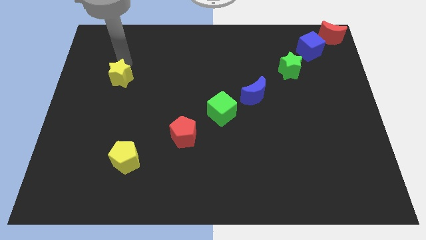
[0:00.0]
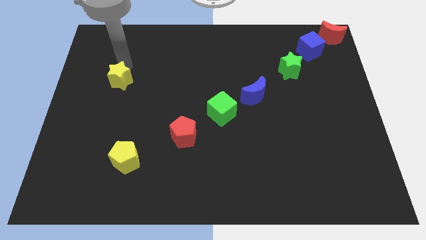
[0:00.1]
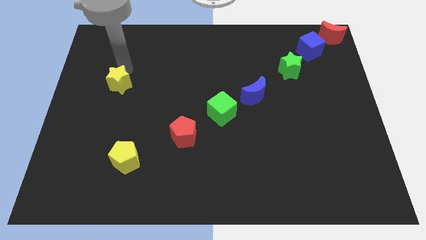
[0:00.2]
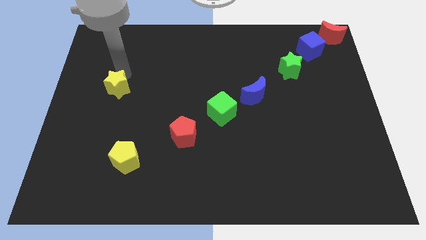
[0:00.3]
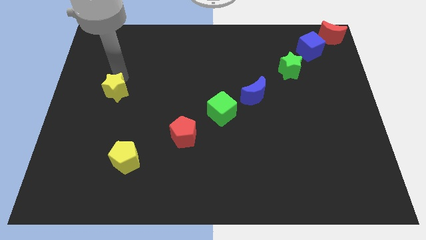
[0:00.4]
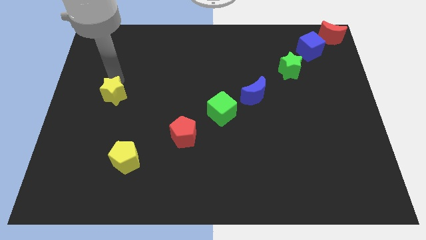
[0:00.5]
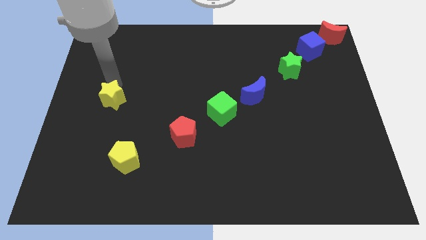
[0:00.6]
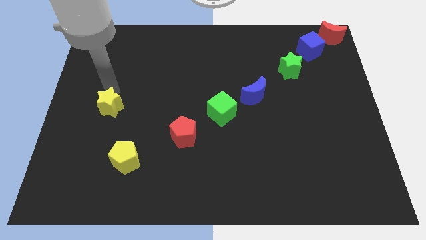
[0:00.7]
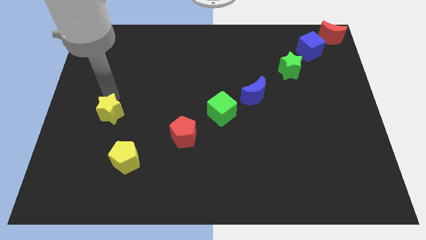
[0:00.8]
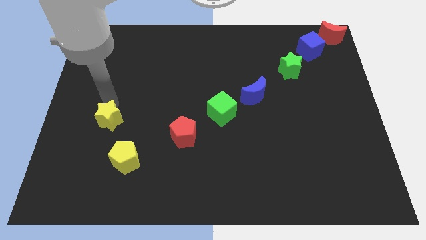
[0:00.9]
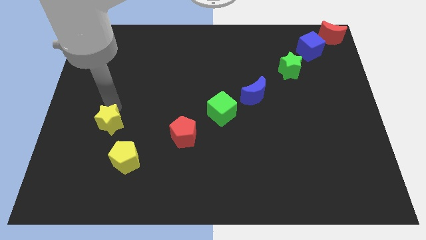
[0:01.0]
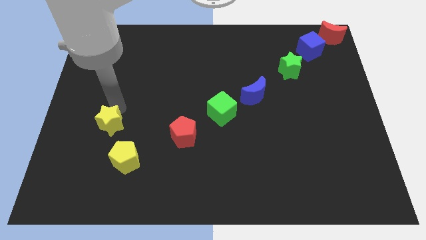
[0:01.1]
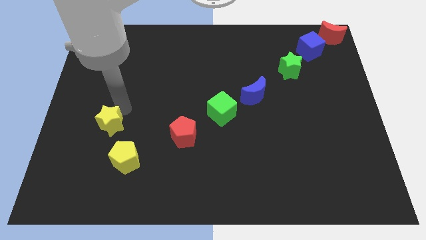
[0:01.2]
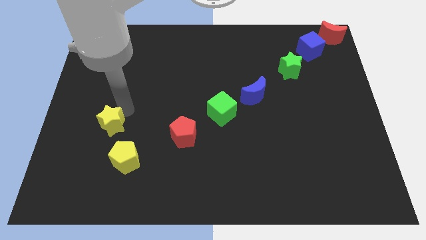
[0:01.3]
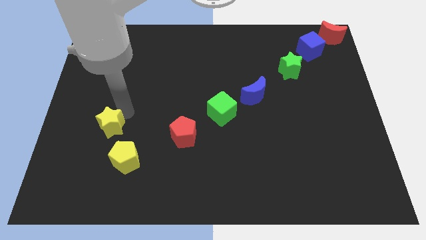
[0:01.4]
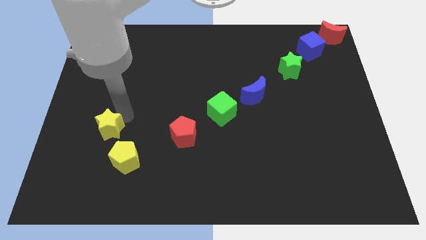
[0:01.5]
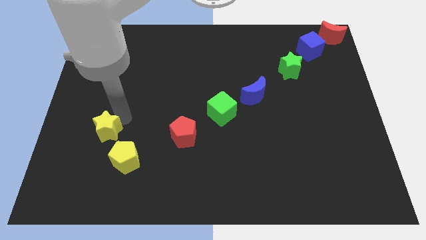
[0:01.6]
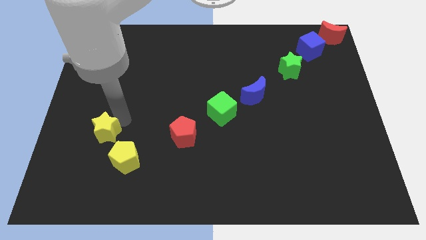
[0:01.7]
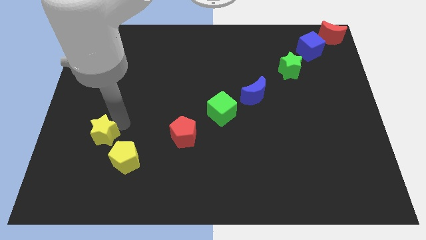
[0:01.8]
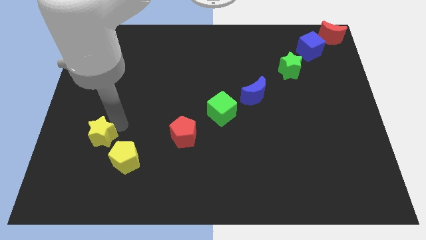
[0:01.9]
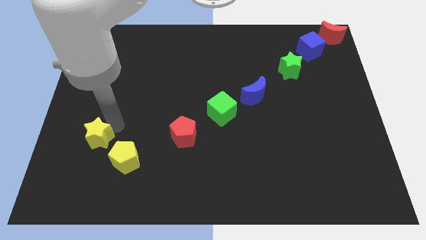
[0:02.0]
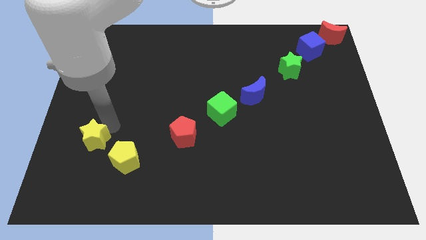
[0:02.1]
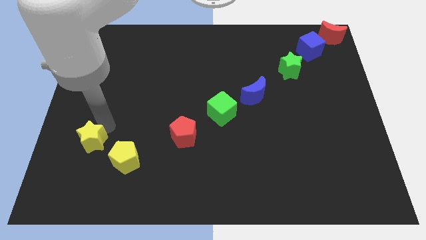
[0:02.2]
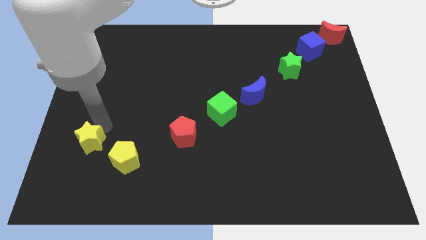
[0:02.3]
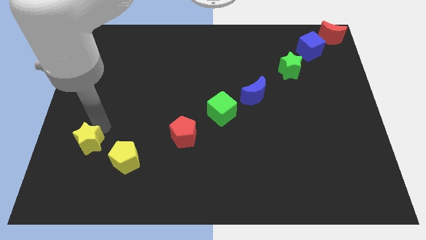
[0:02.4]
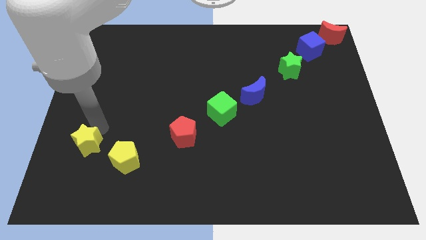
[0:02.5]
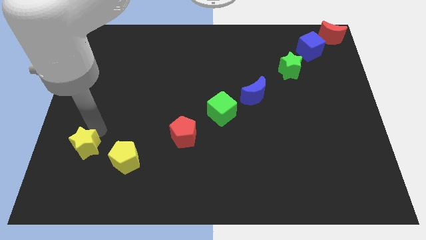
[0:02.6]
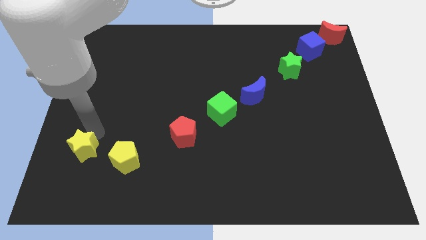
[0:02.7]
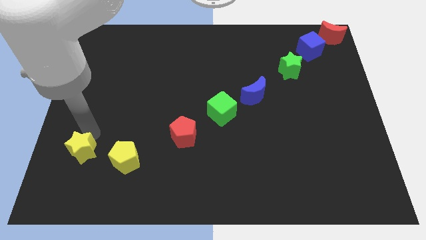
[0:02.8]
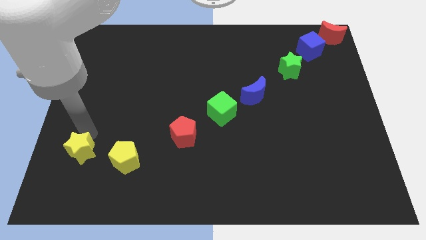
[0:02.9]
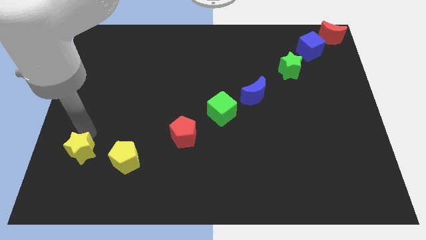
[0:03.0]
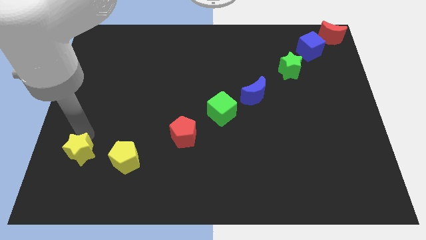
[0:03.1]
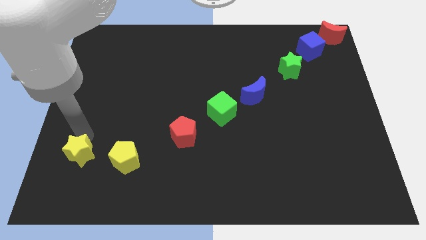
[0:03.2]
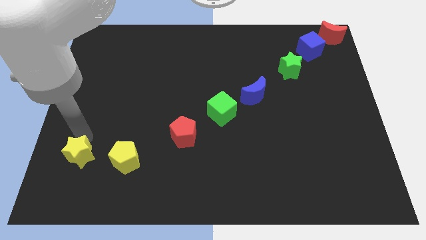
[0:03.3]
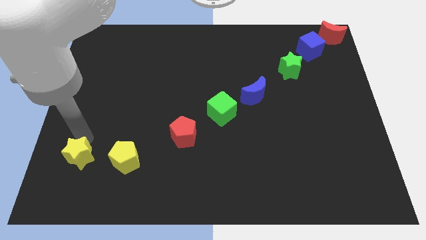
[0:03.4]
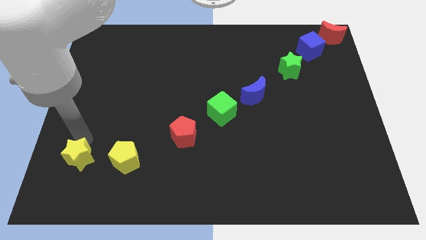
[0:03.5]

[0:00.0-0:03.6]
move the yellow star towards the left of the yellow pentagon

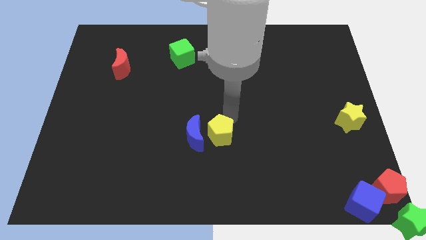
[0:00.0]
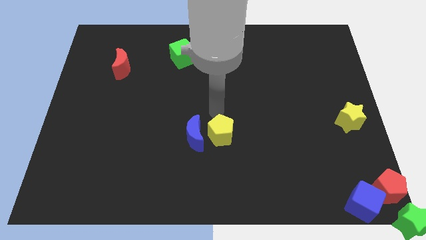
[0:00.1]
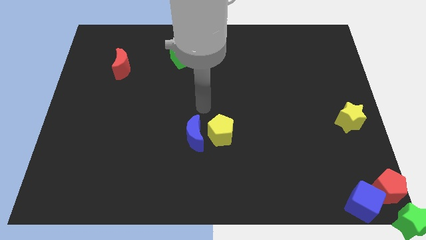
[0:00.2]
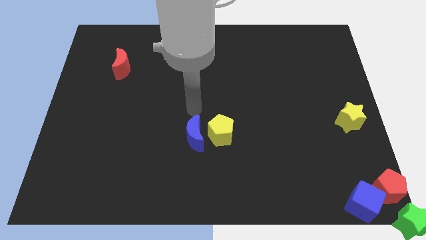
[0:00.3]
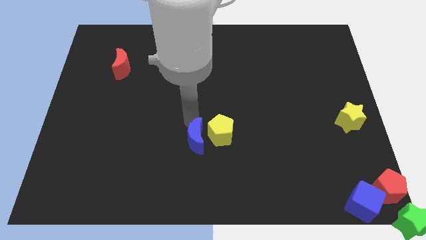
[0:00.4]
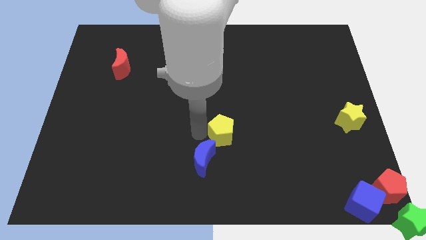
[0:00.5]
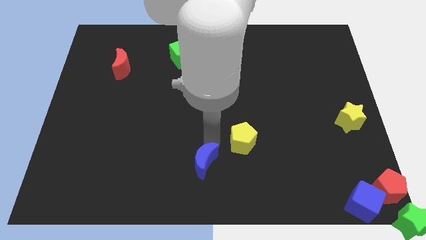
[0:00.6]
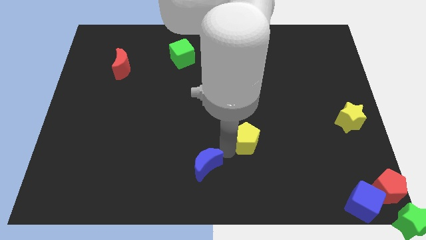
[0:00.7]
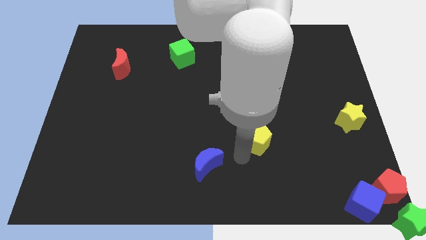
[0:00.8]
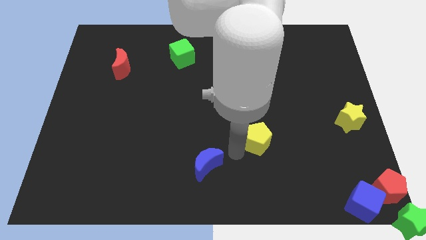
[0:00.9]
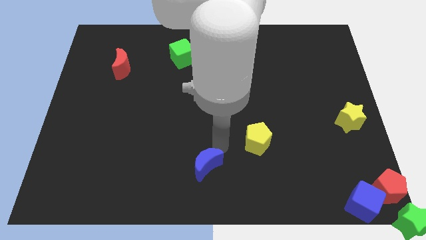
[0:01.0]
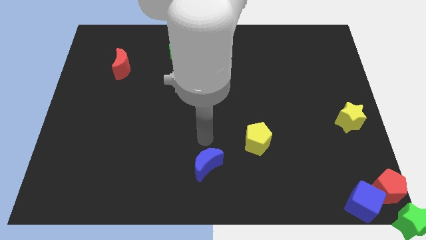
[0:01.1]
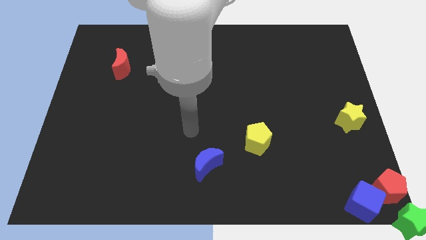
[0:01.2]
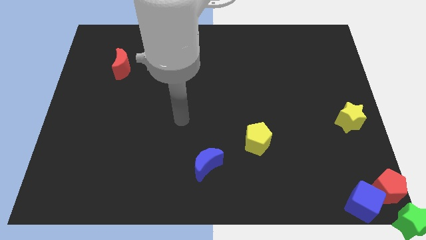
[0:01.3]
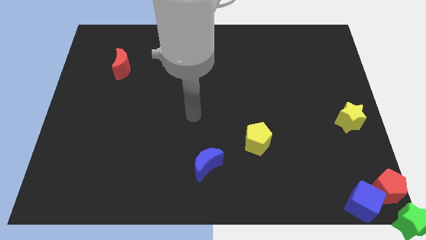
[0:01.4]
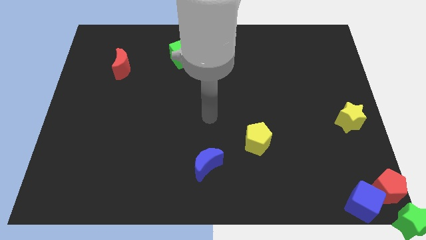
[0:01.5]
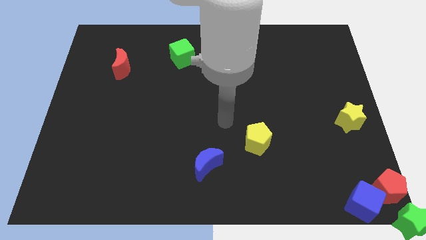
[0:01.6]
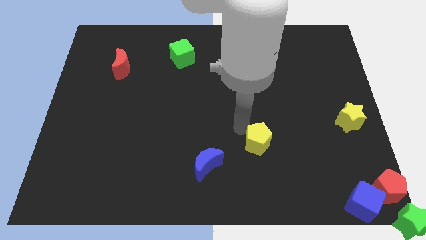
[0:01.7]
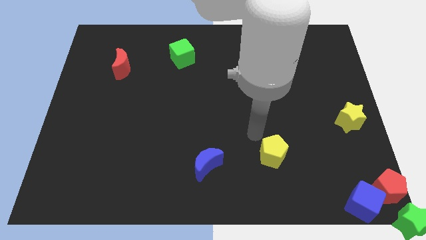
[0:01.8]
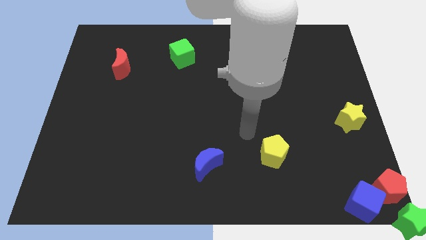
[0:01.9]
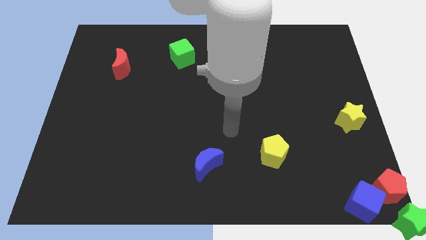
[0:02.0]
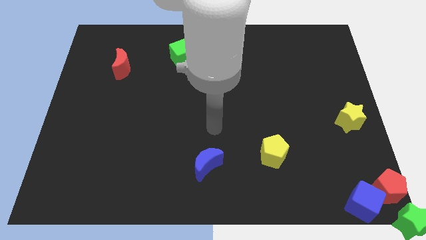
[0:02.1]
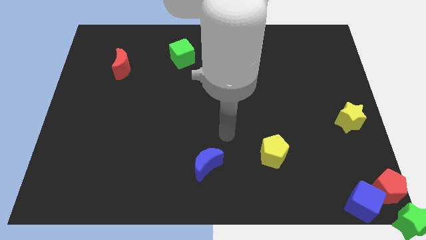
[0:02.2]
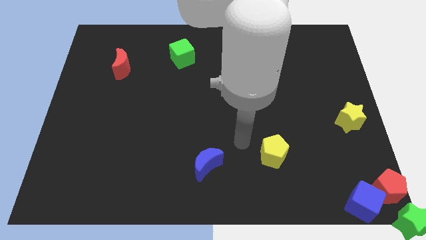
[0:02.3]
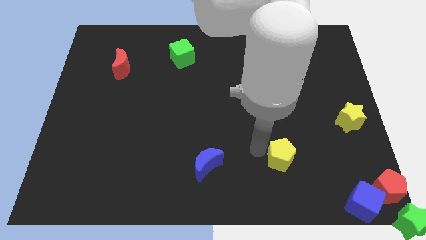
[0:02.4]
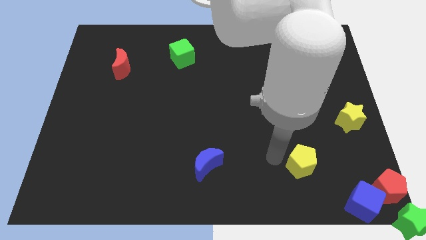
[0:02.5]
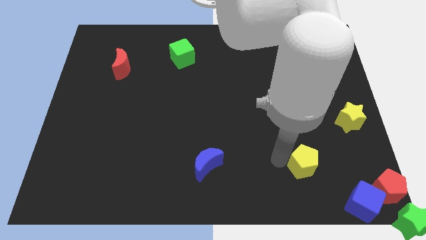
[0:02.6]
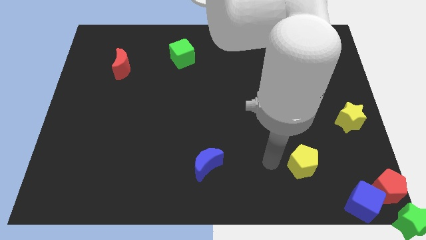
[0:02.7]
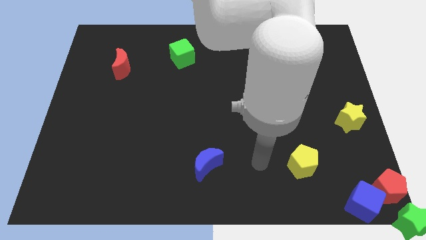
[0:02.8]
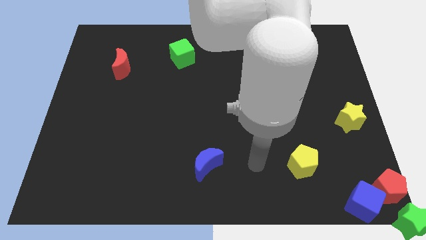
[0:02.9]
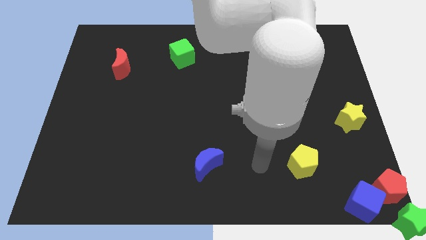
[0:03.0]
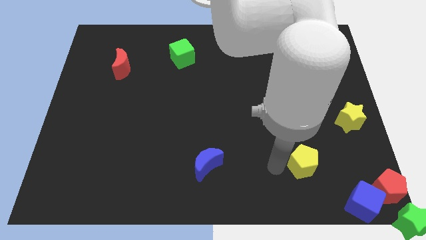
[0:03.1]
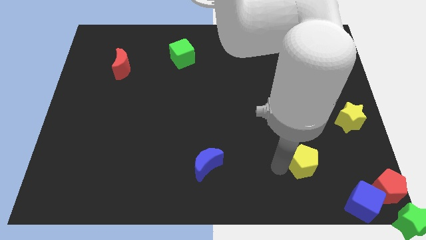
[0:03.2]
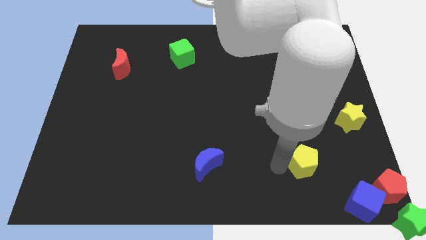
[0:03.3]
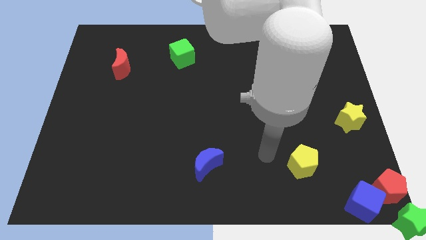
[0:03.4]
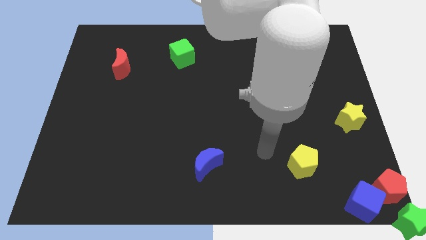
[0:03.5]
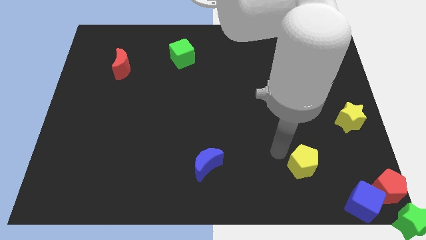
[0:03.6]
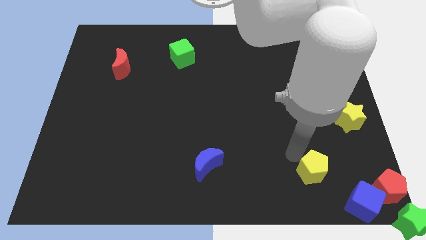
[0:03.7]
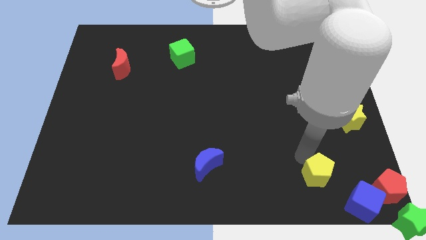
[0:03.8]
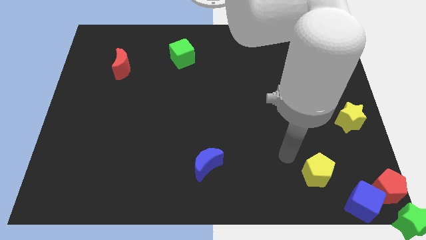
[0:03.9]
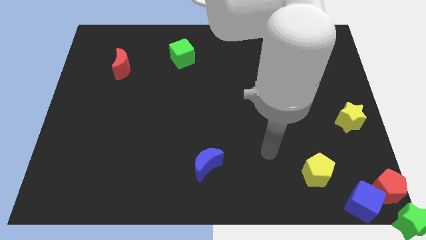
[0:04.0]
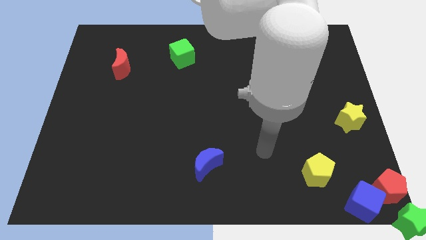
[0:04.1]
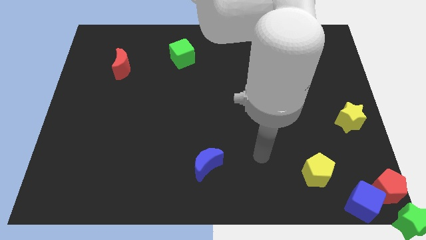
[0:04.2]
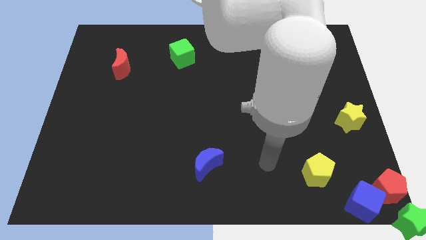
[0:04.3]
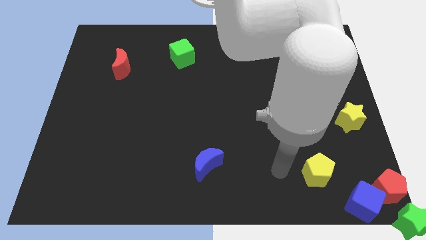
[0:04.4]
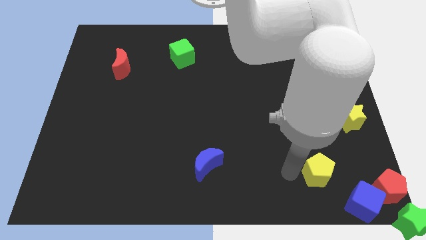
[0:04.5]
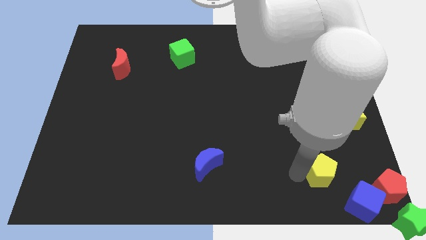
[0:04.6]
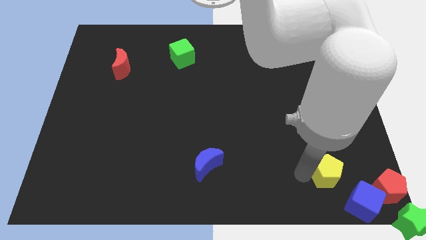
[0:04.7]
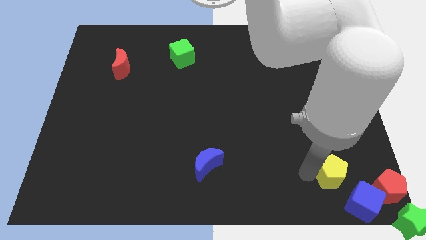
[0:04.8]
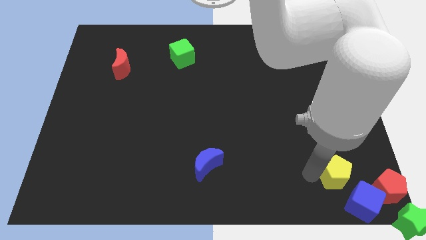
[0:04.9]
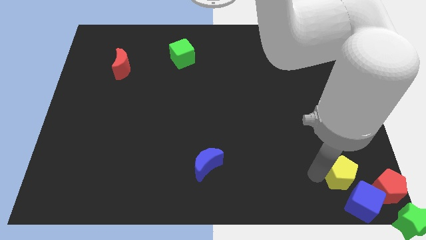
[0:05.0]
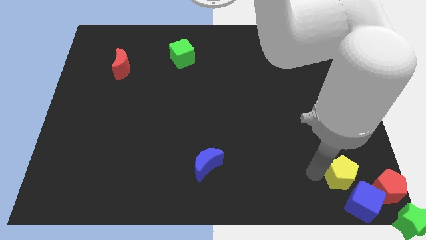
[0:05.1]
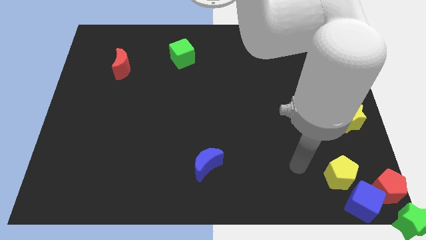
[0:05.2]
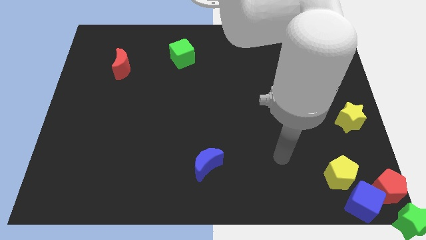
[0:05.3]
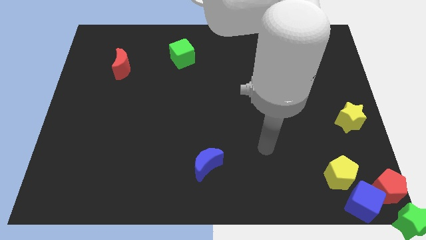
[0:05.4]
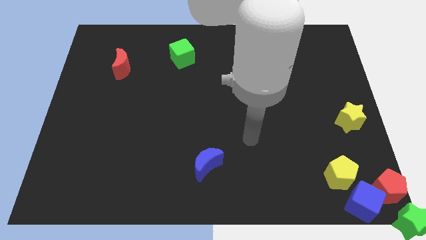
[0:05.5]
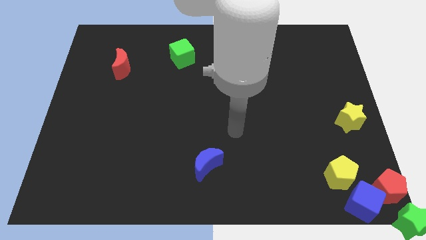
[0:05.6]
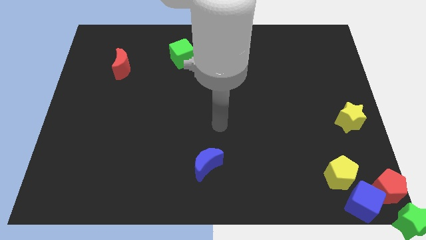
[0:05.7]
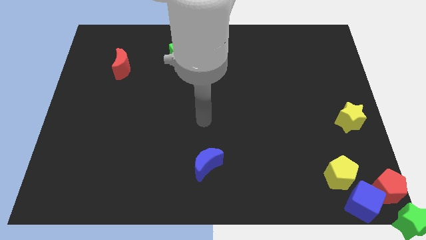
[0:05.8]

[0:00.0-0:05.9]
push the yellow pentagon close to the blue cube
